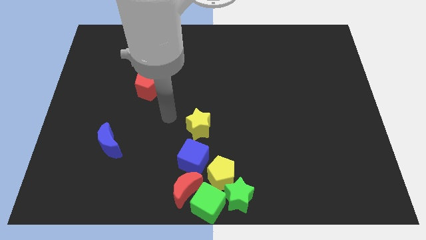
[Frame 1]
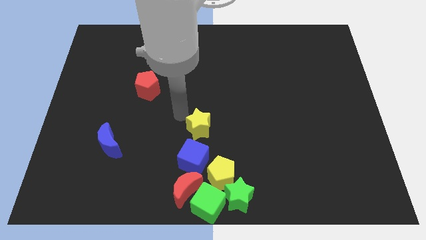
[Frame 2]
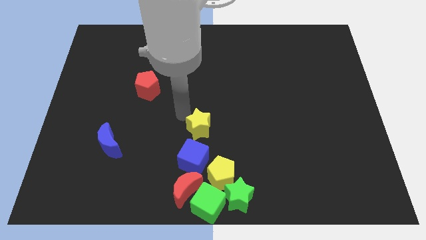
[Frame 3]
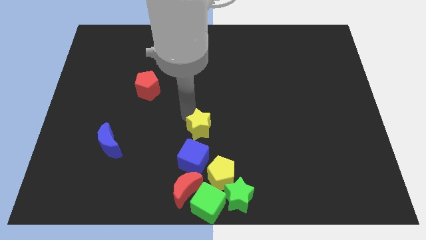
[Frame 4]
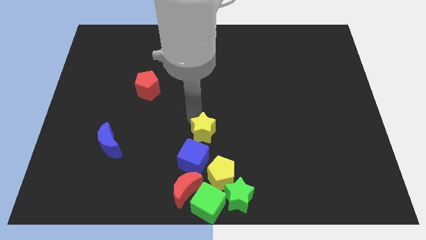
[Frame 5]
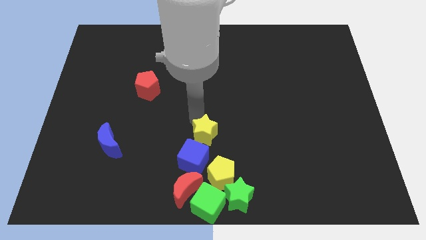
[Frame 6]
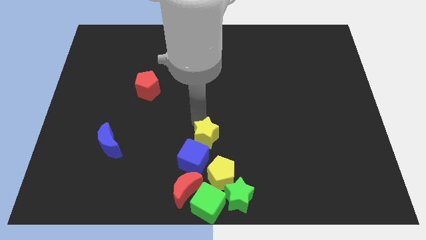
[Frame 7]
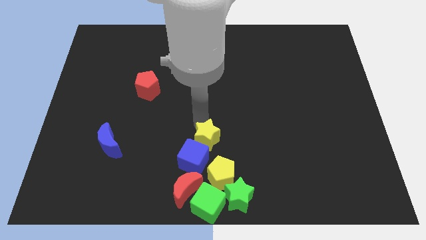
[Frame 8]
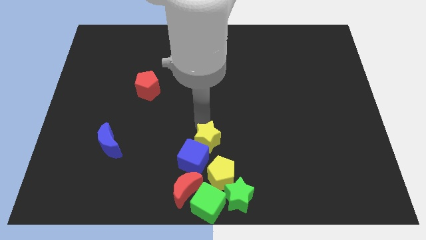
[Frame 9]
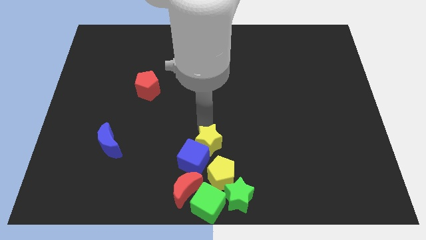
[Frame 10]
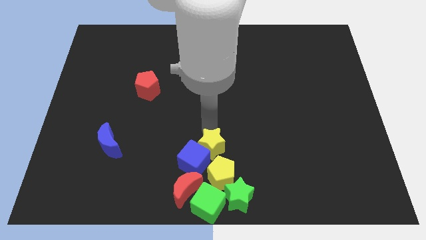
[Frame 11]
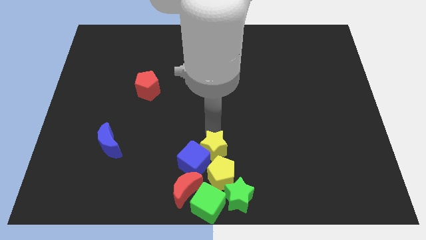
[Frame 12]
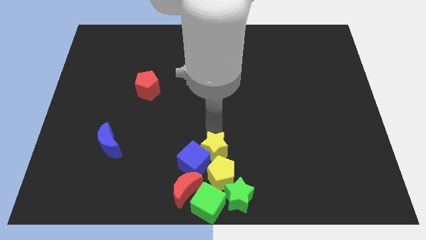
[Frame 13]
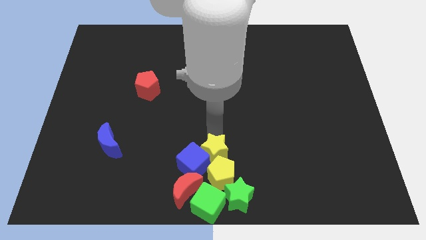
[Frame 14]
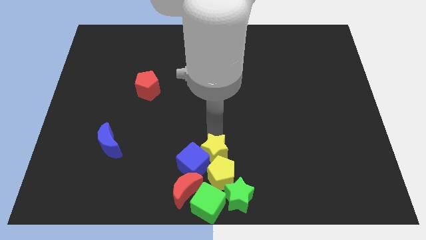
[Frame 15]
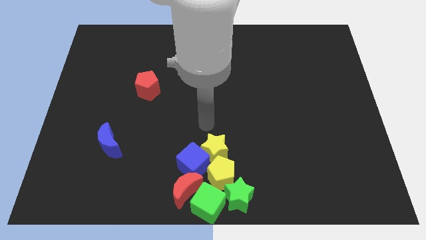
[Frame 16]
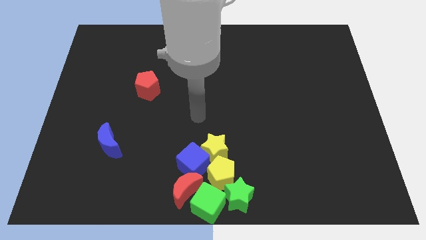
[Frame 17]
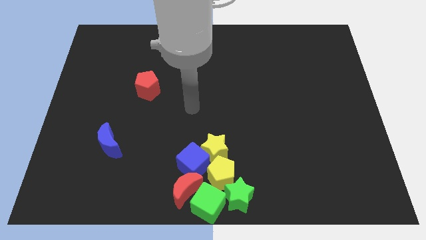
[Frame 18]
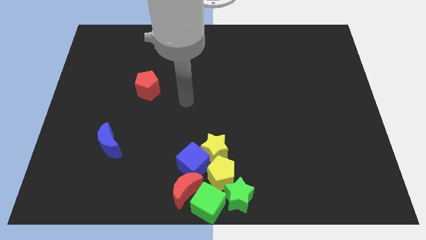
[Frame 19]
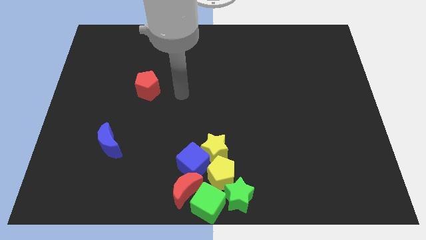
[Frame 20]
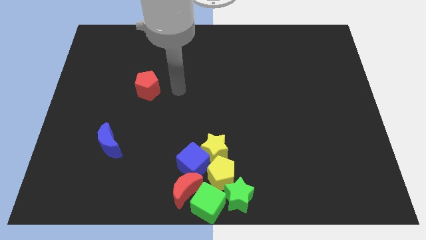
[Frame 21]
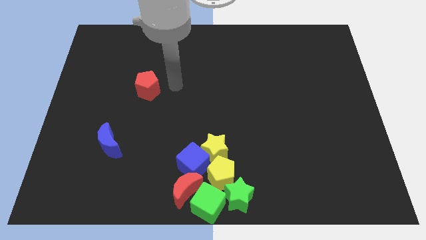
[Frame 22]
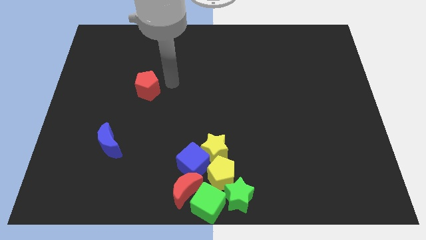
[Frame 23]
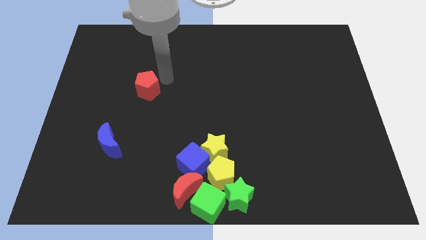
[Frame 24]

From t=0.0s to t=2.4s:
move the yellow star to the top of the yellow pentagon

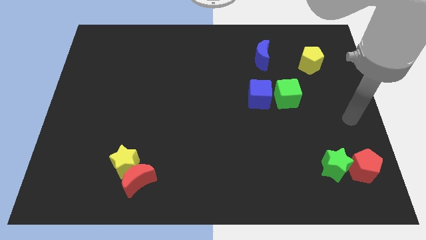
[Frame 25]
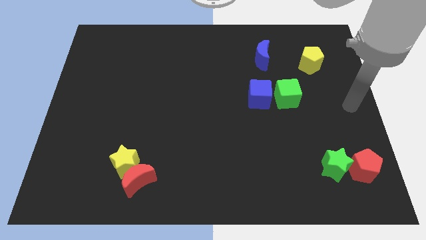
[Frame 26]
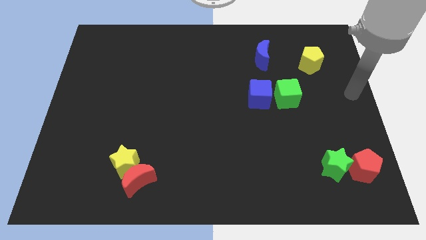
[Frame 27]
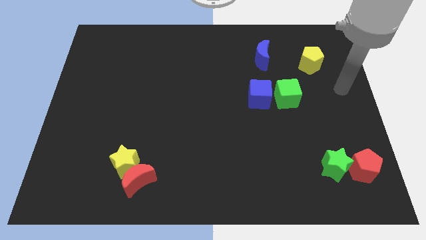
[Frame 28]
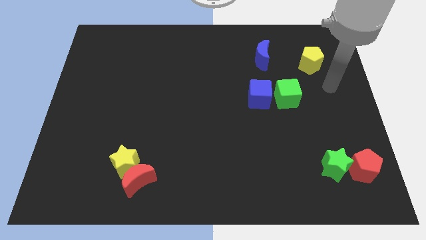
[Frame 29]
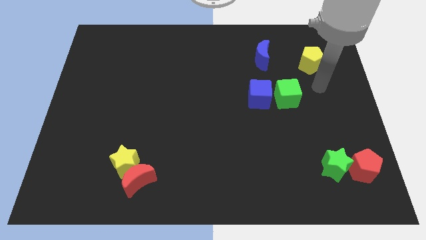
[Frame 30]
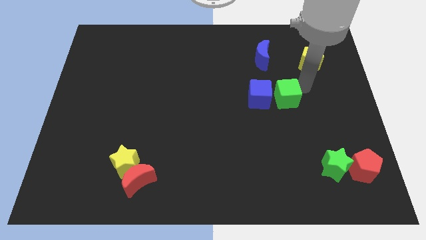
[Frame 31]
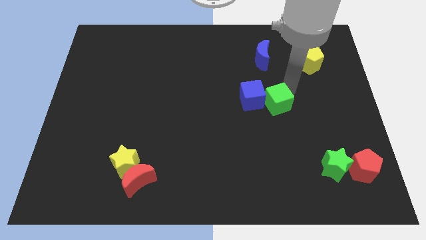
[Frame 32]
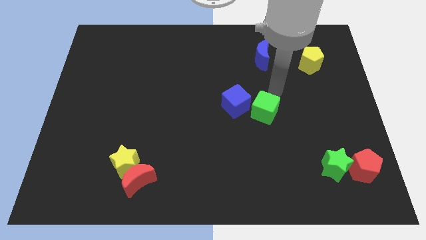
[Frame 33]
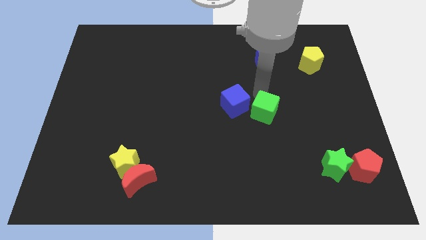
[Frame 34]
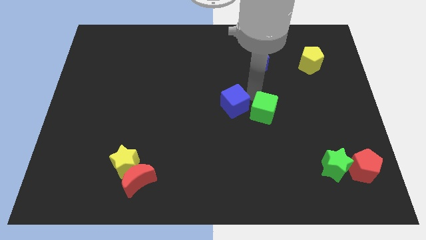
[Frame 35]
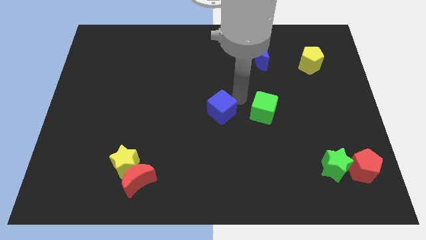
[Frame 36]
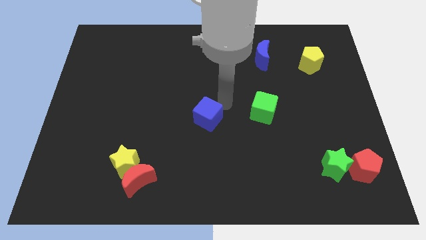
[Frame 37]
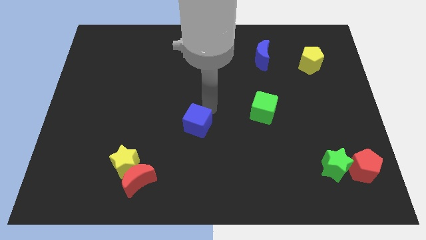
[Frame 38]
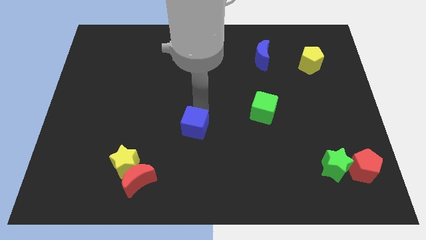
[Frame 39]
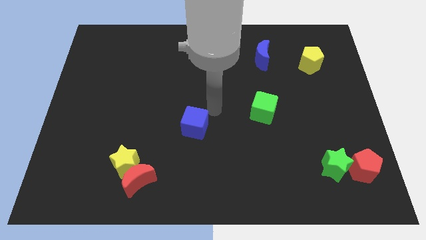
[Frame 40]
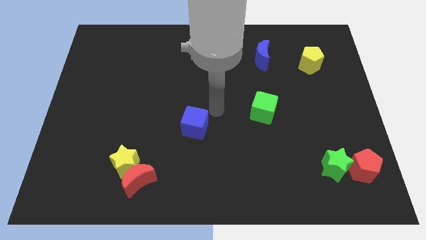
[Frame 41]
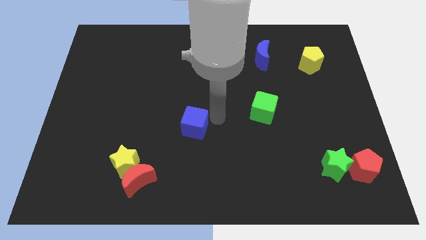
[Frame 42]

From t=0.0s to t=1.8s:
push the blue cube slightly down and to the left

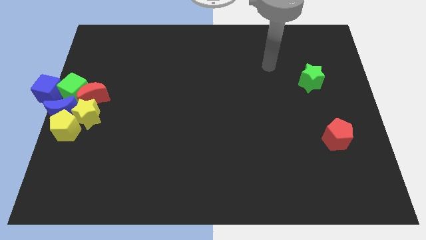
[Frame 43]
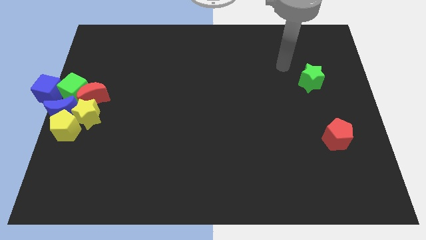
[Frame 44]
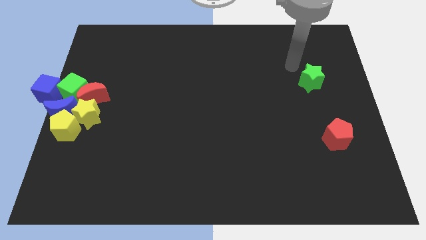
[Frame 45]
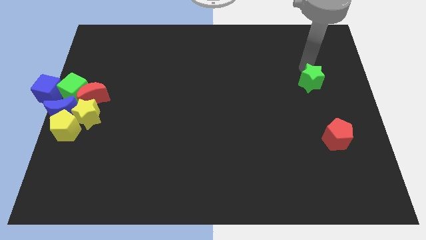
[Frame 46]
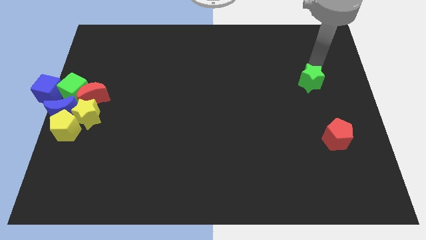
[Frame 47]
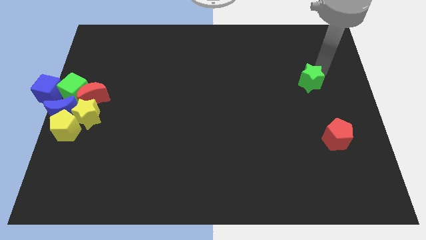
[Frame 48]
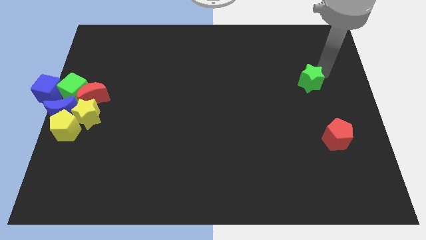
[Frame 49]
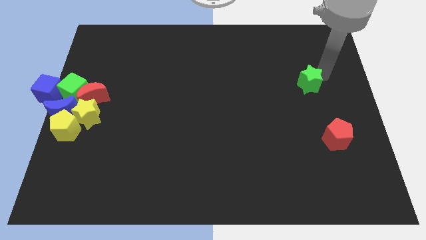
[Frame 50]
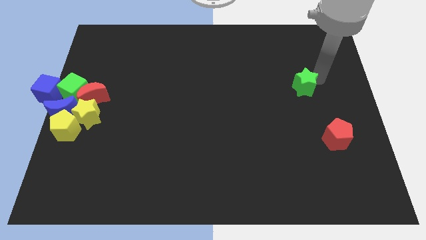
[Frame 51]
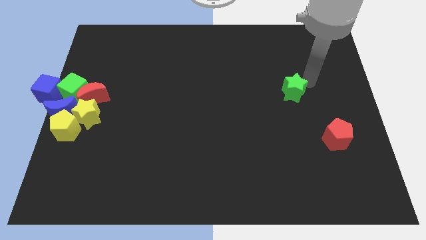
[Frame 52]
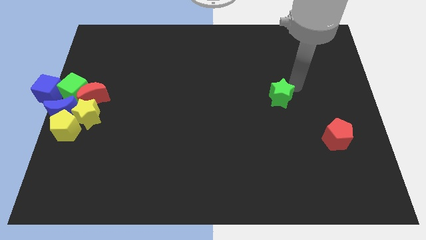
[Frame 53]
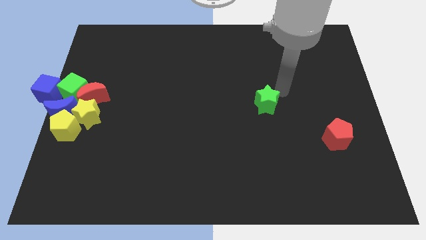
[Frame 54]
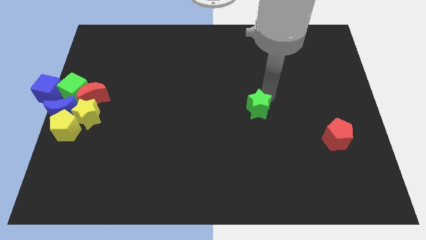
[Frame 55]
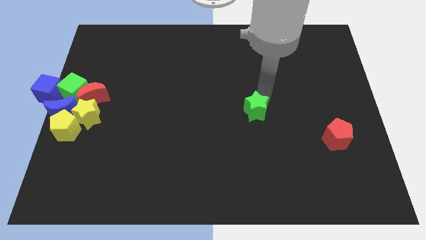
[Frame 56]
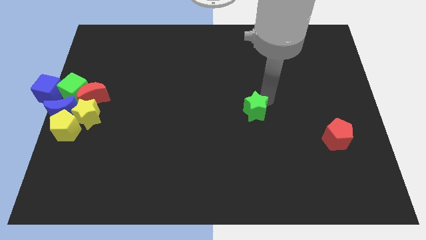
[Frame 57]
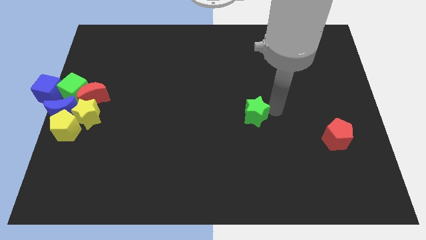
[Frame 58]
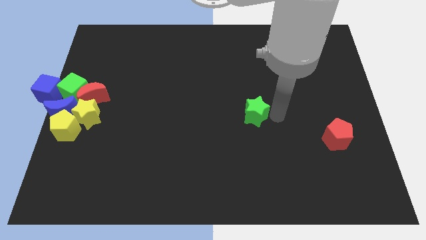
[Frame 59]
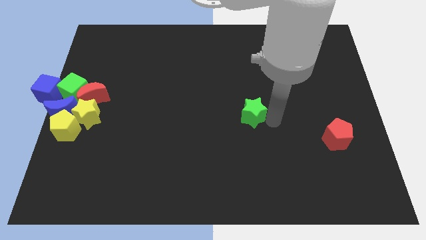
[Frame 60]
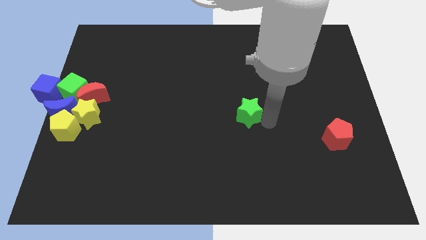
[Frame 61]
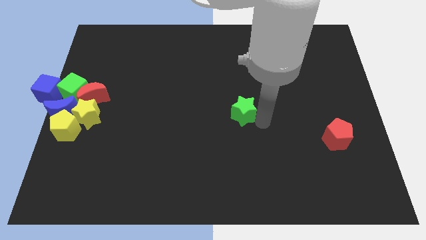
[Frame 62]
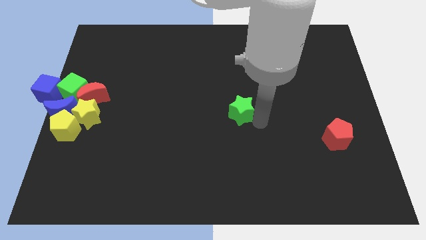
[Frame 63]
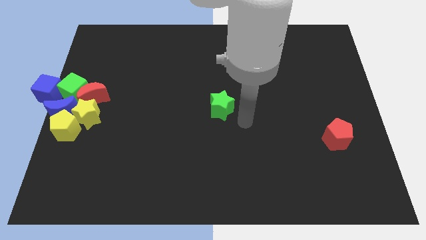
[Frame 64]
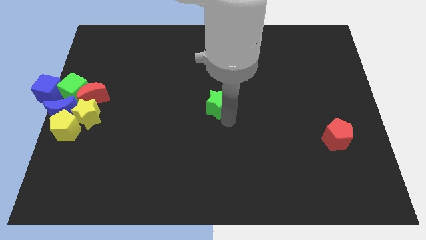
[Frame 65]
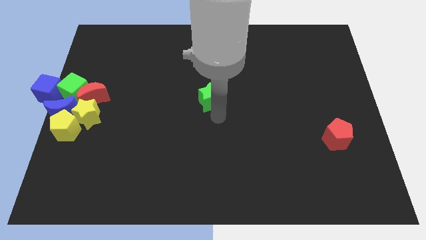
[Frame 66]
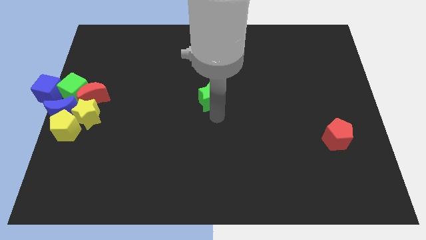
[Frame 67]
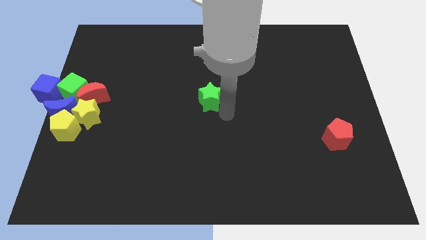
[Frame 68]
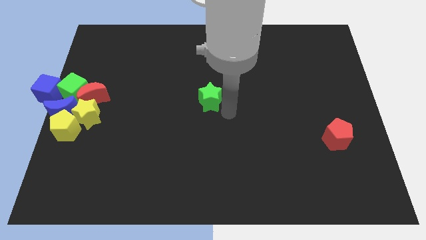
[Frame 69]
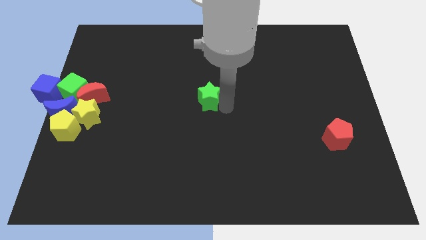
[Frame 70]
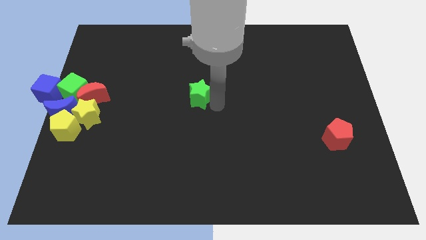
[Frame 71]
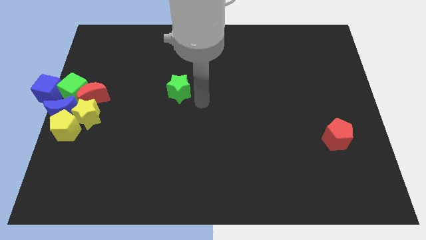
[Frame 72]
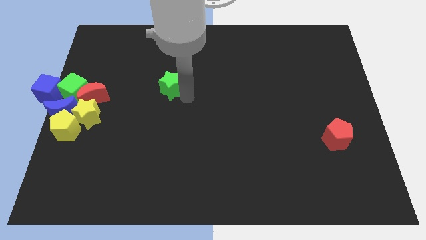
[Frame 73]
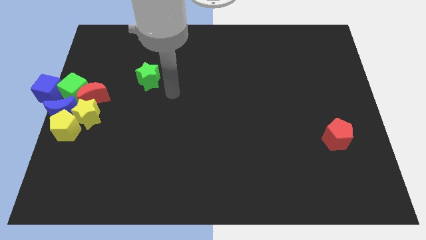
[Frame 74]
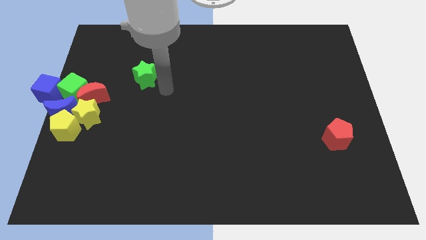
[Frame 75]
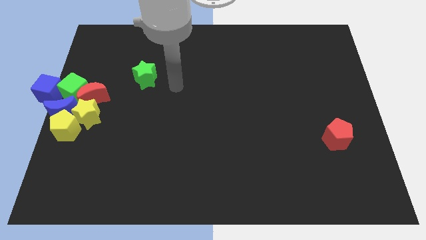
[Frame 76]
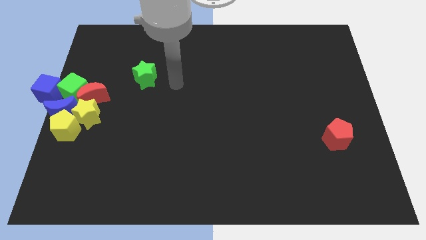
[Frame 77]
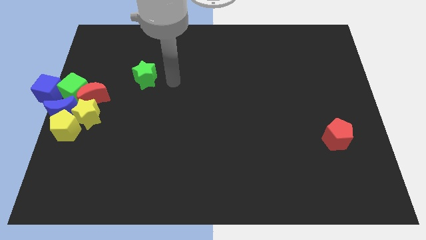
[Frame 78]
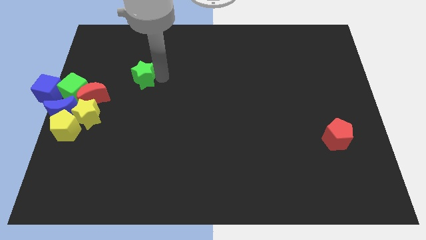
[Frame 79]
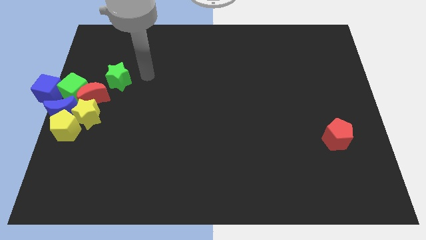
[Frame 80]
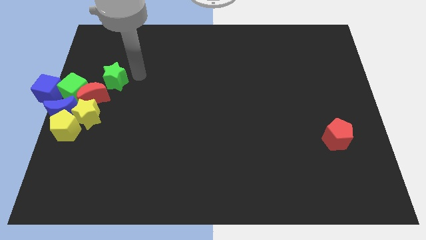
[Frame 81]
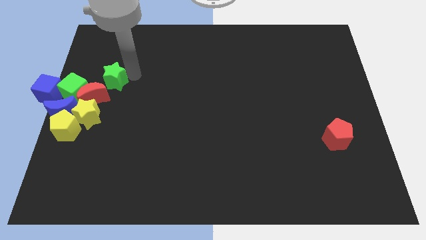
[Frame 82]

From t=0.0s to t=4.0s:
move the green star to the group of block

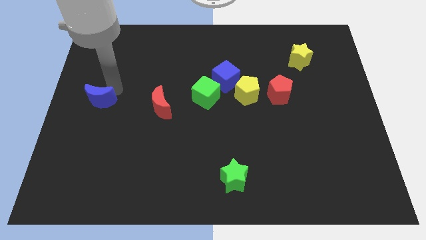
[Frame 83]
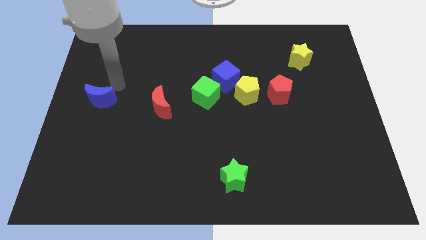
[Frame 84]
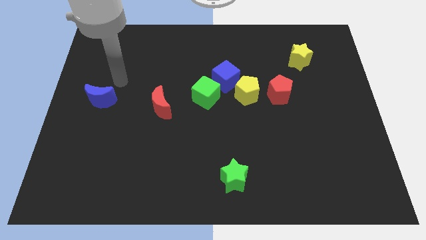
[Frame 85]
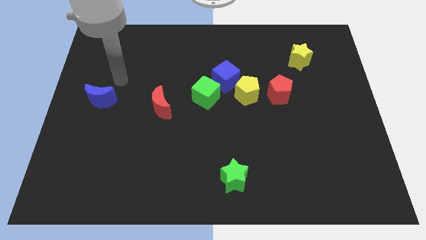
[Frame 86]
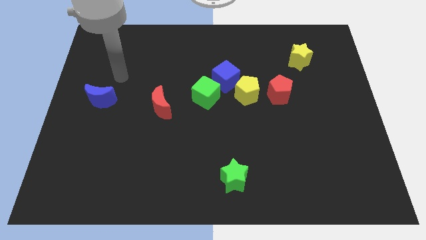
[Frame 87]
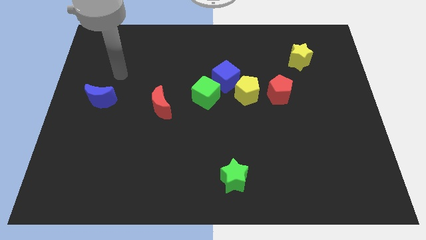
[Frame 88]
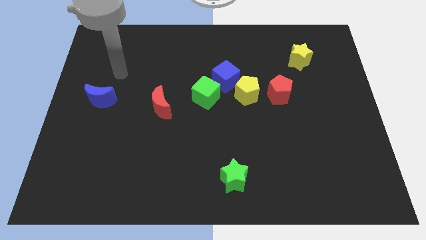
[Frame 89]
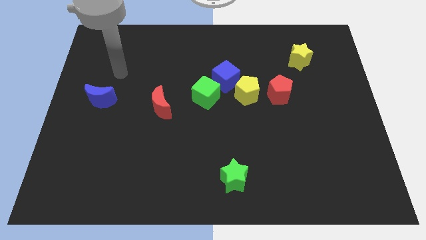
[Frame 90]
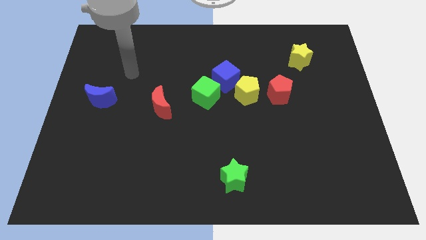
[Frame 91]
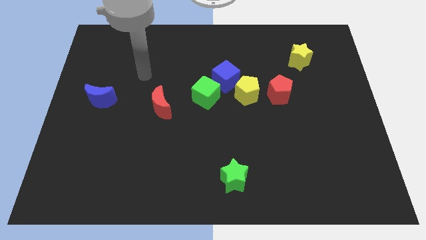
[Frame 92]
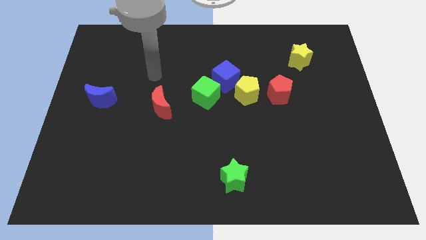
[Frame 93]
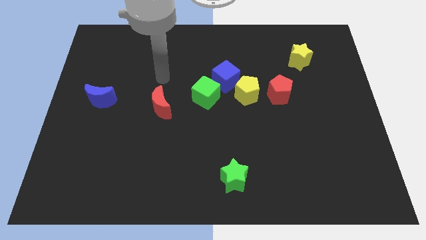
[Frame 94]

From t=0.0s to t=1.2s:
move the arm away from the blue moon
